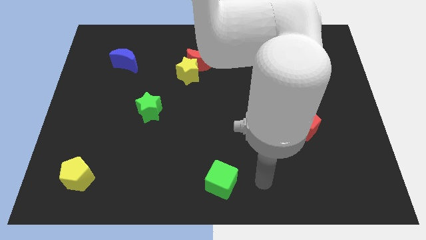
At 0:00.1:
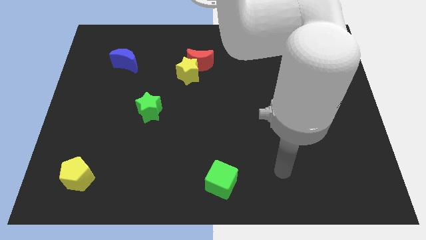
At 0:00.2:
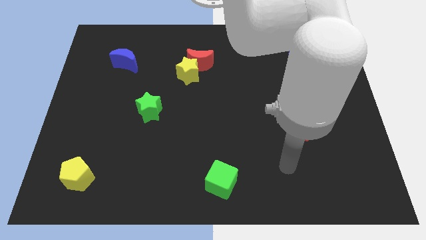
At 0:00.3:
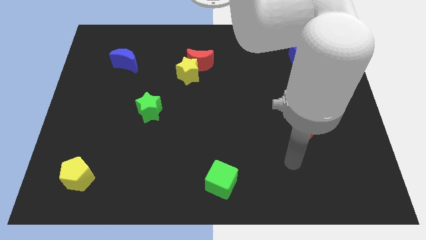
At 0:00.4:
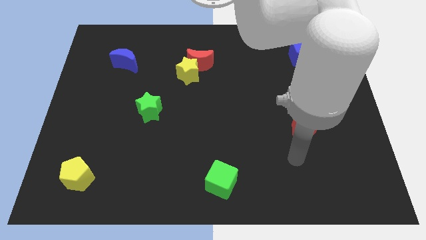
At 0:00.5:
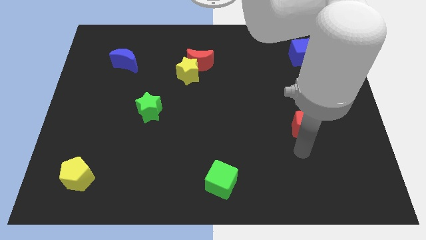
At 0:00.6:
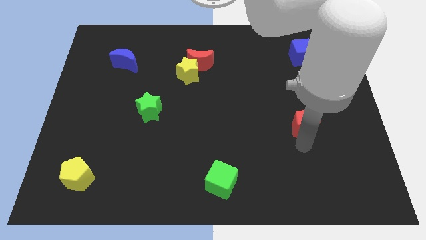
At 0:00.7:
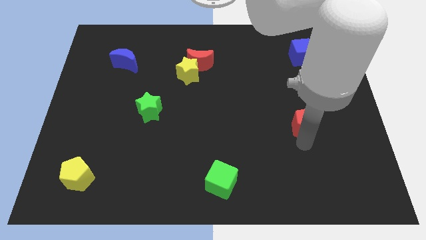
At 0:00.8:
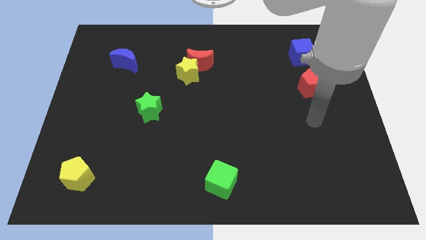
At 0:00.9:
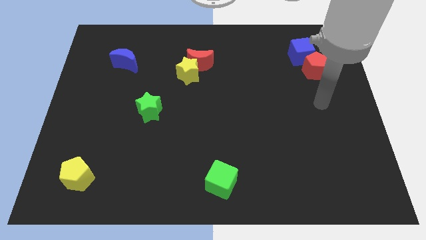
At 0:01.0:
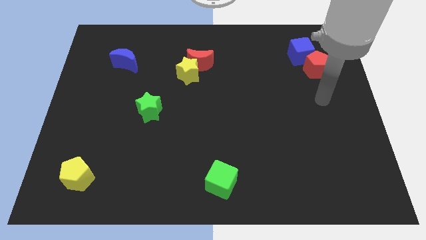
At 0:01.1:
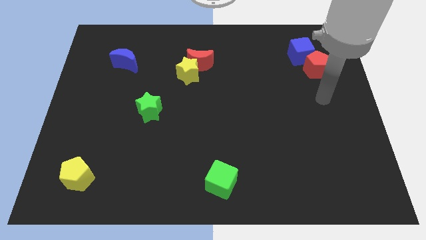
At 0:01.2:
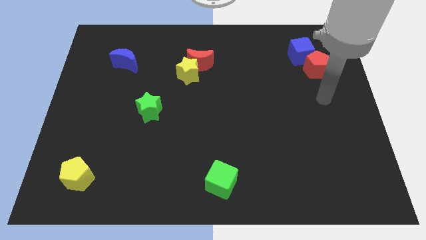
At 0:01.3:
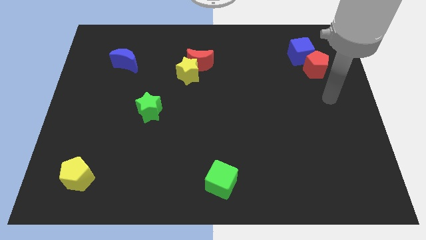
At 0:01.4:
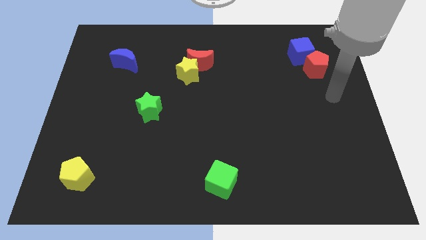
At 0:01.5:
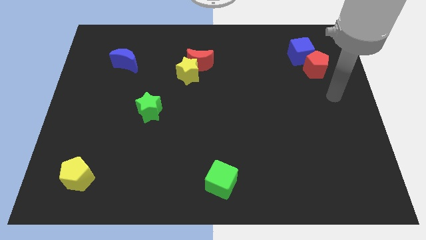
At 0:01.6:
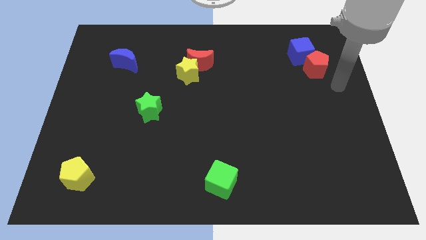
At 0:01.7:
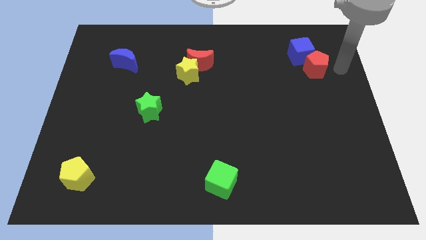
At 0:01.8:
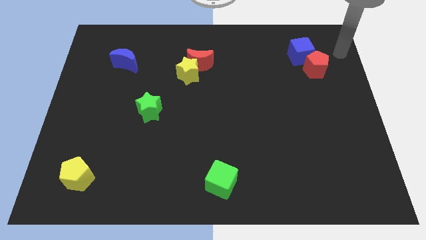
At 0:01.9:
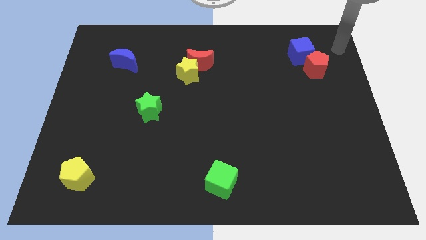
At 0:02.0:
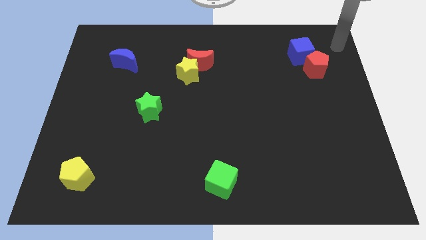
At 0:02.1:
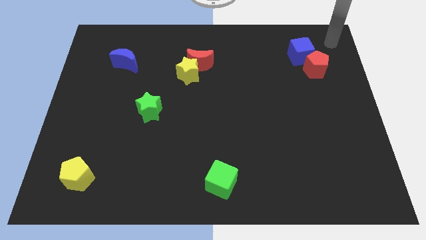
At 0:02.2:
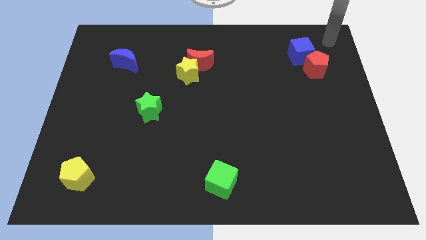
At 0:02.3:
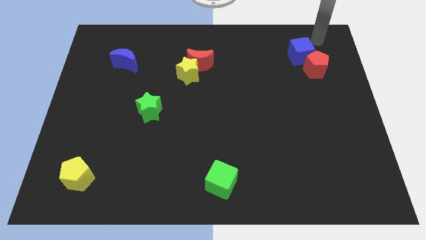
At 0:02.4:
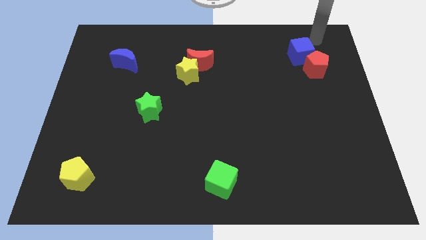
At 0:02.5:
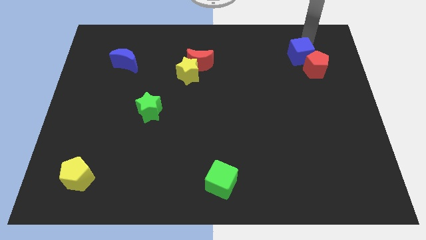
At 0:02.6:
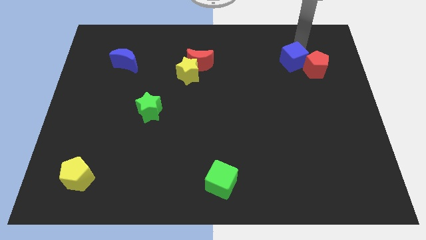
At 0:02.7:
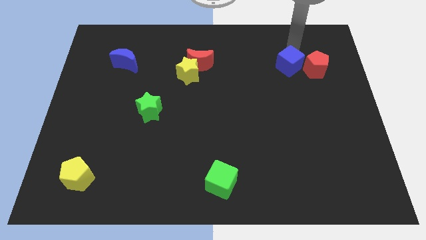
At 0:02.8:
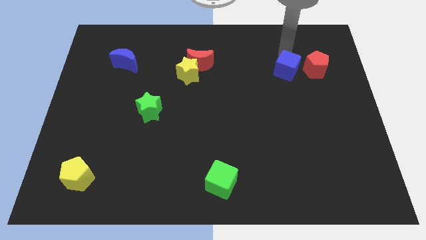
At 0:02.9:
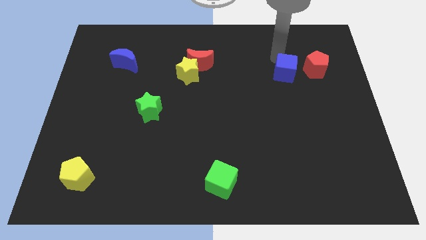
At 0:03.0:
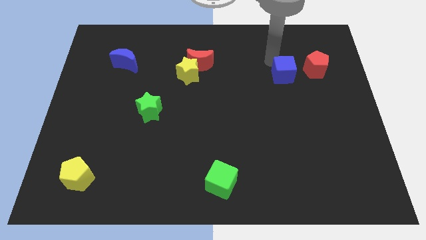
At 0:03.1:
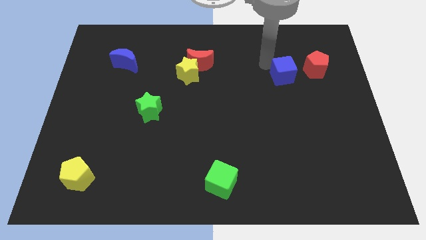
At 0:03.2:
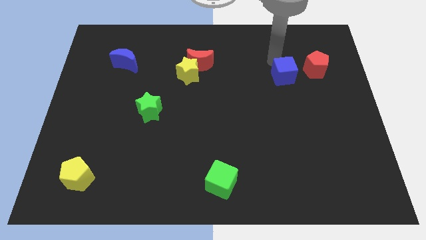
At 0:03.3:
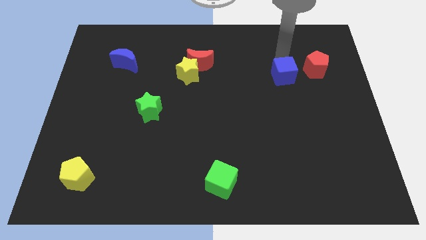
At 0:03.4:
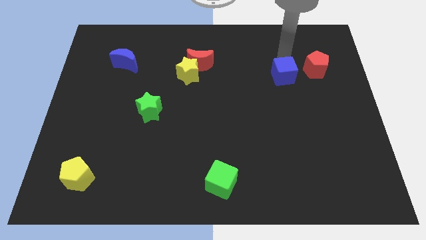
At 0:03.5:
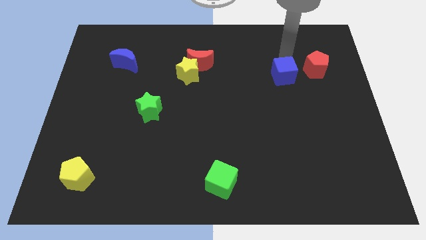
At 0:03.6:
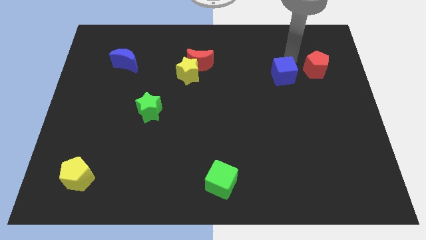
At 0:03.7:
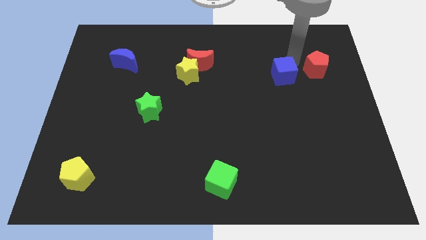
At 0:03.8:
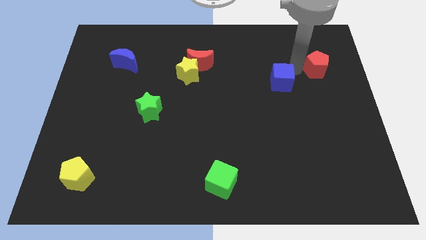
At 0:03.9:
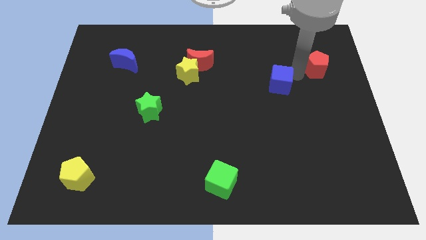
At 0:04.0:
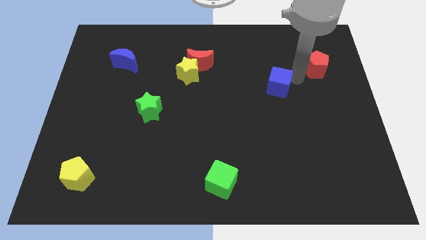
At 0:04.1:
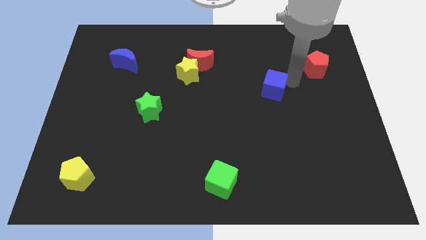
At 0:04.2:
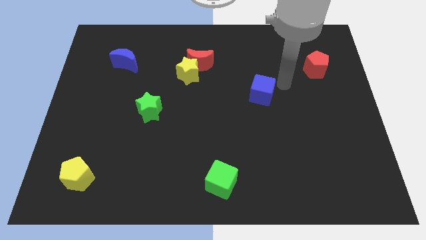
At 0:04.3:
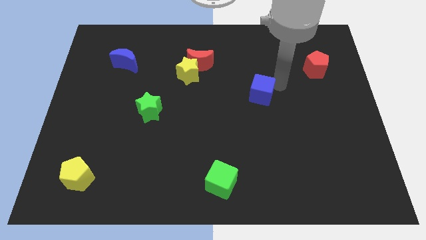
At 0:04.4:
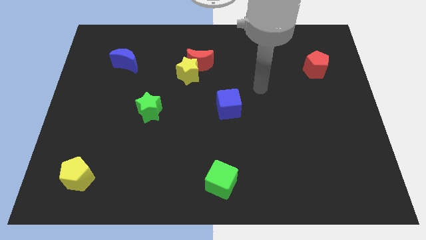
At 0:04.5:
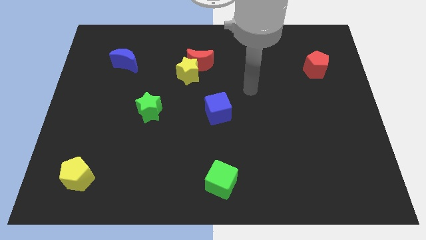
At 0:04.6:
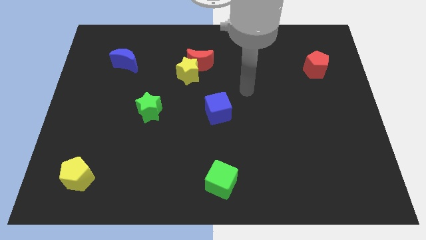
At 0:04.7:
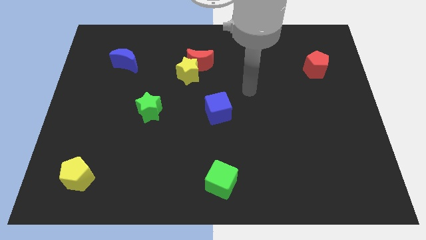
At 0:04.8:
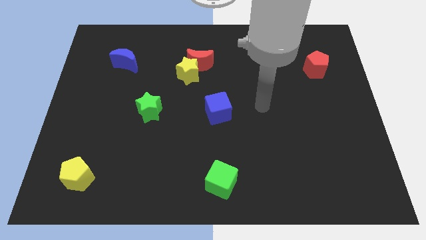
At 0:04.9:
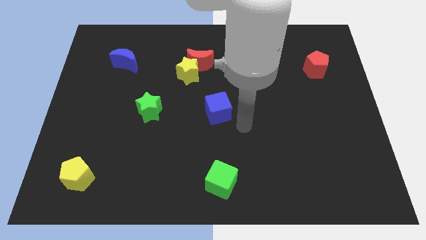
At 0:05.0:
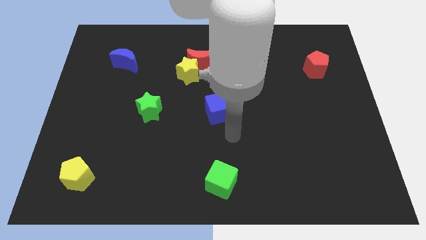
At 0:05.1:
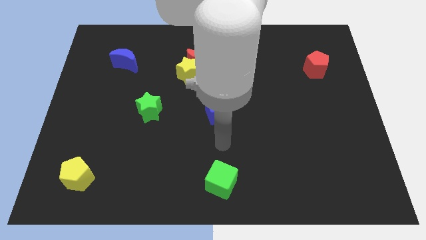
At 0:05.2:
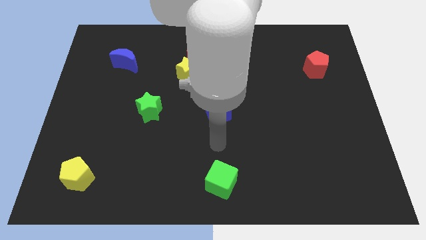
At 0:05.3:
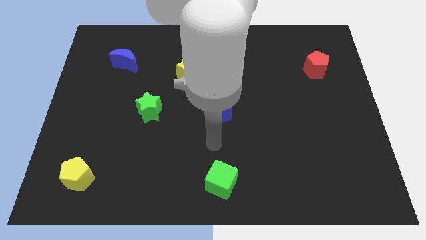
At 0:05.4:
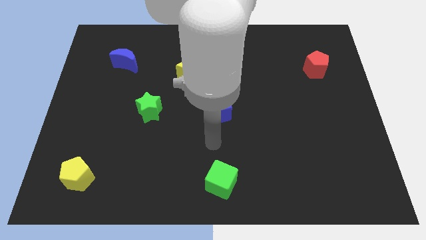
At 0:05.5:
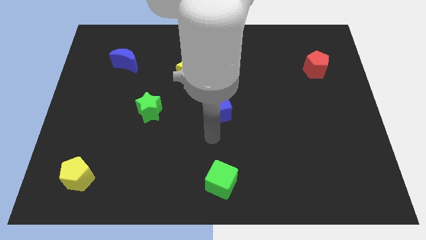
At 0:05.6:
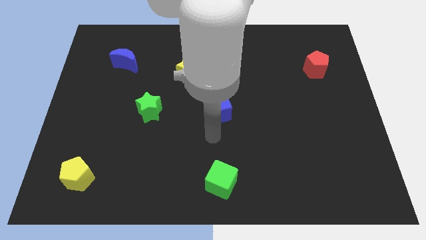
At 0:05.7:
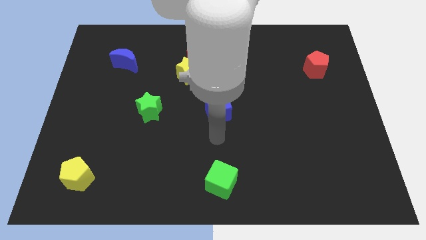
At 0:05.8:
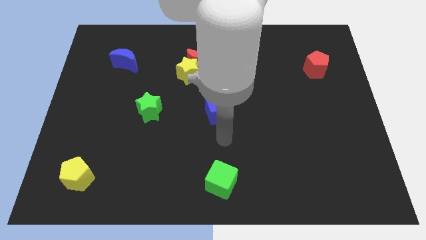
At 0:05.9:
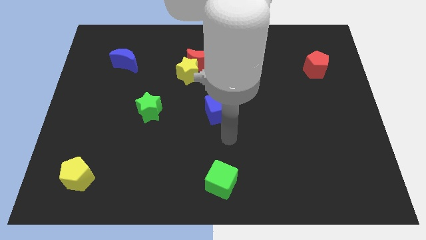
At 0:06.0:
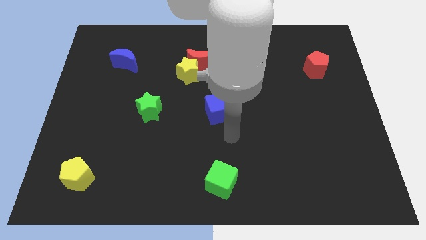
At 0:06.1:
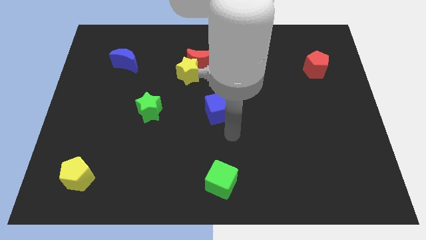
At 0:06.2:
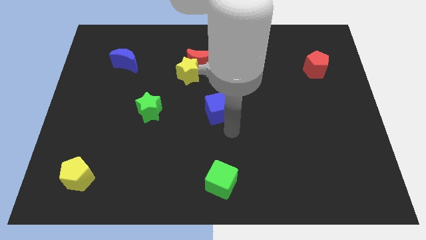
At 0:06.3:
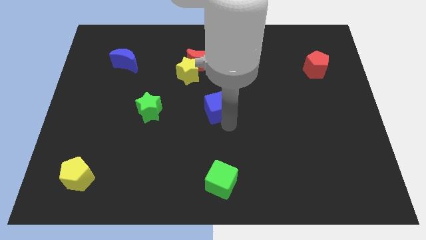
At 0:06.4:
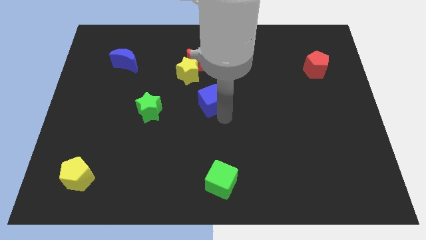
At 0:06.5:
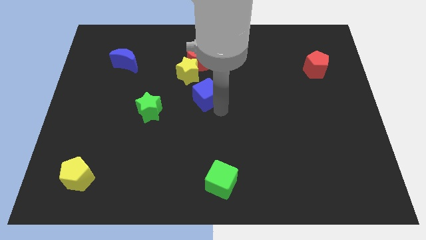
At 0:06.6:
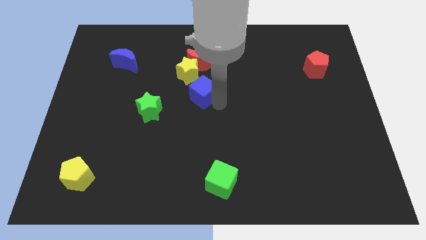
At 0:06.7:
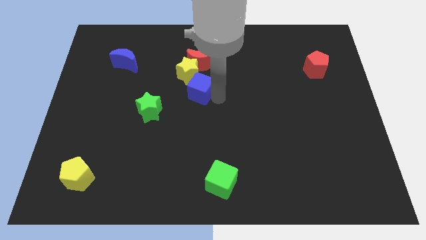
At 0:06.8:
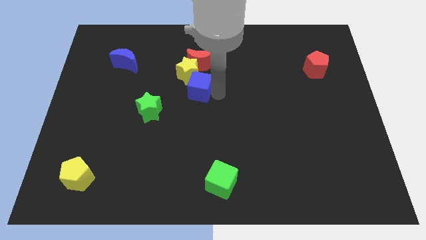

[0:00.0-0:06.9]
slide the blue cube to the yellow star

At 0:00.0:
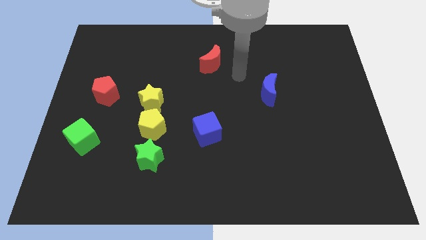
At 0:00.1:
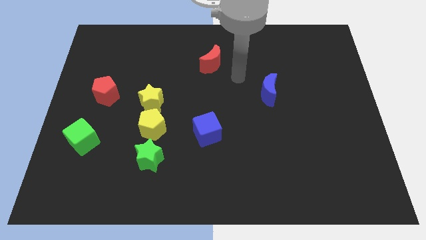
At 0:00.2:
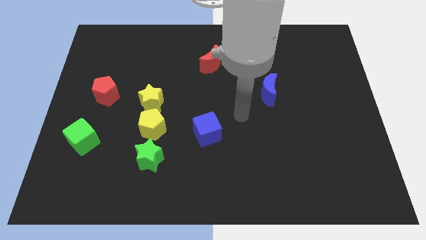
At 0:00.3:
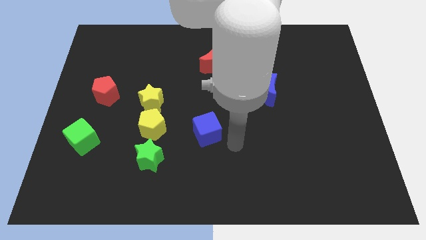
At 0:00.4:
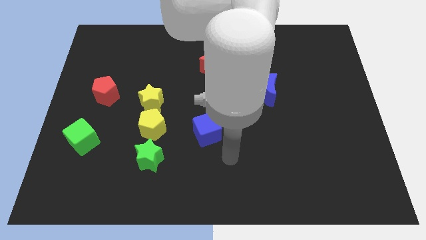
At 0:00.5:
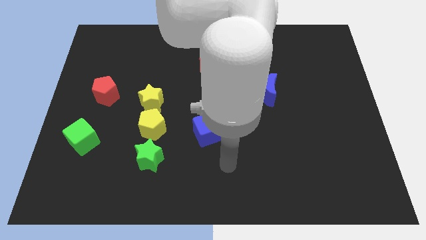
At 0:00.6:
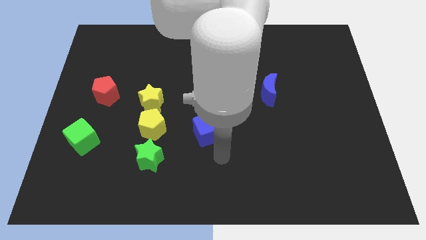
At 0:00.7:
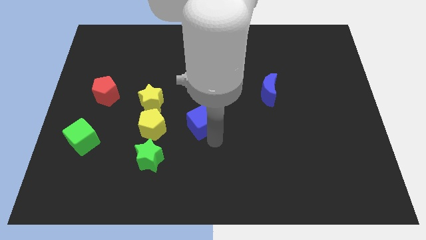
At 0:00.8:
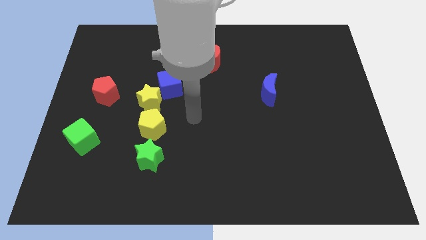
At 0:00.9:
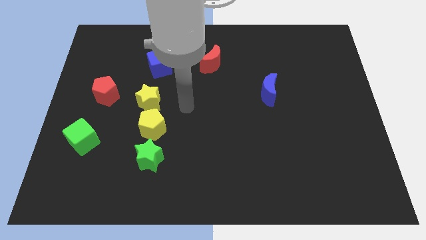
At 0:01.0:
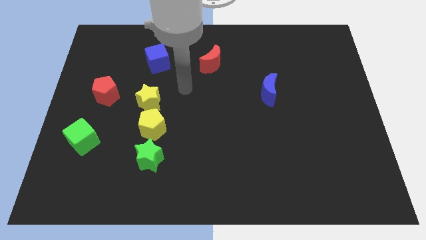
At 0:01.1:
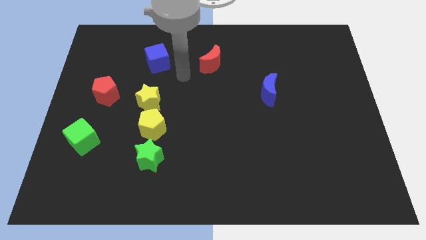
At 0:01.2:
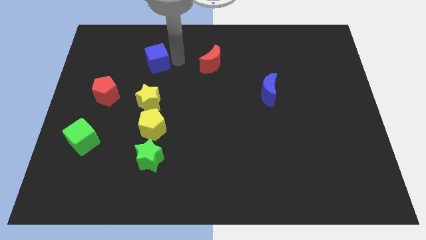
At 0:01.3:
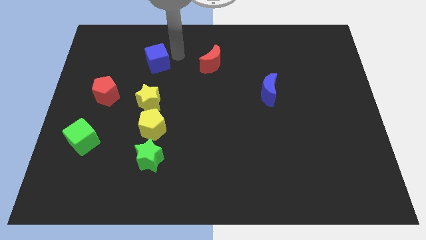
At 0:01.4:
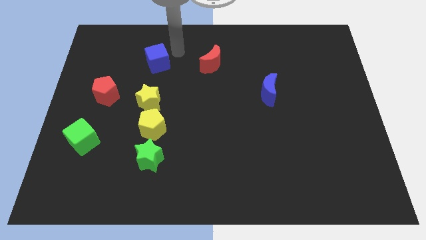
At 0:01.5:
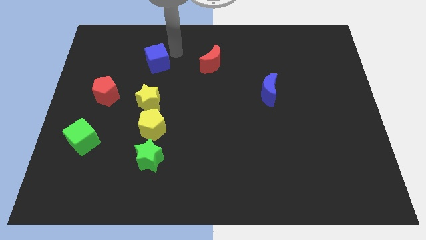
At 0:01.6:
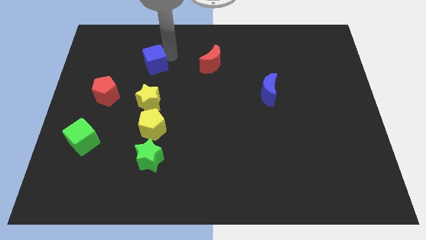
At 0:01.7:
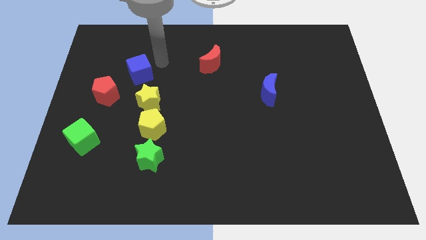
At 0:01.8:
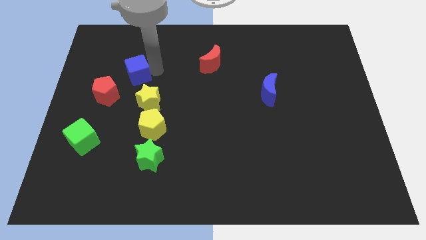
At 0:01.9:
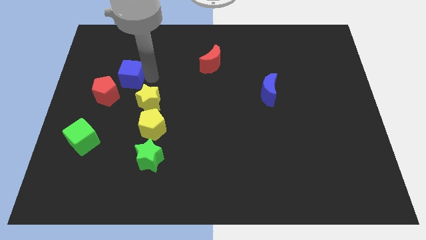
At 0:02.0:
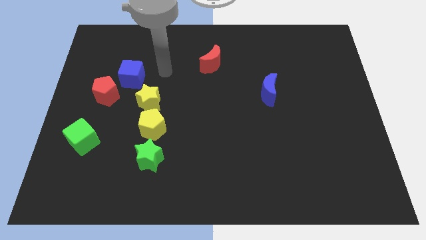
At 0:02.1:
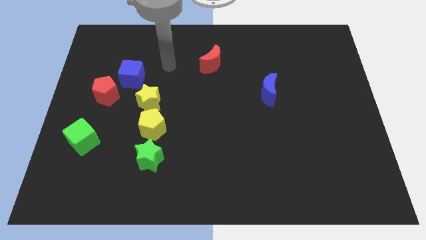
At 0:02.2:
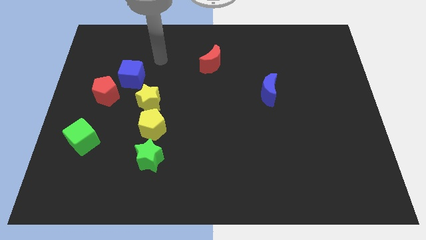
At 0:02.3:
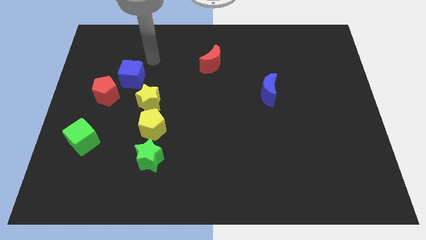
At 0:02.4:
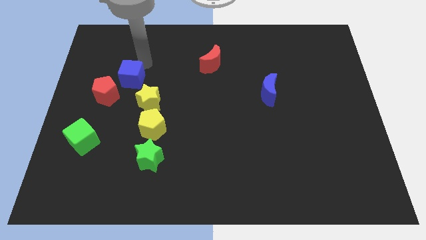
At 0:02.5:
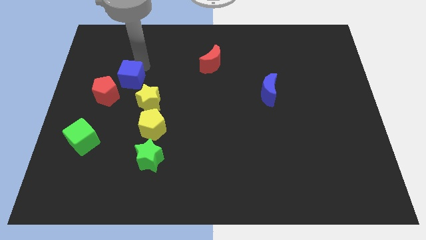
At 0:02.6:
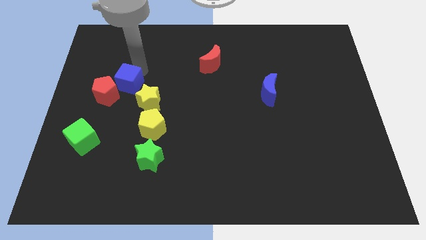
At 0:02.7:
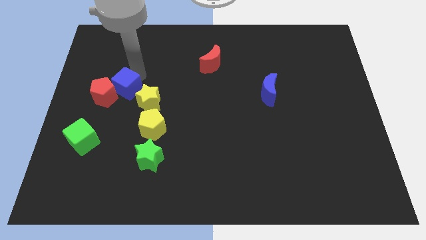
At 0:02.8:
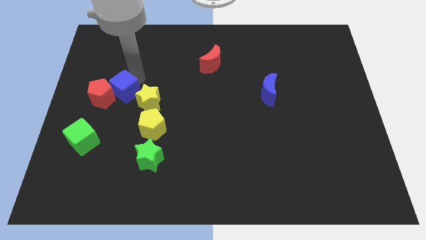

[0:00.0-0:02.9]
move the blue cube next to the red pentagon
